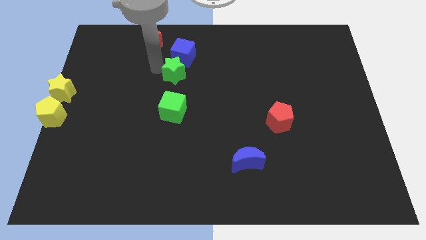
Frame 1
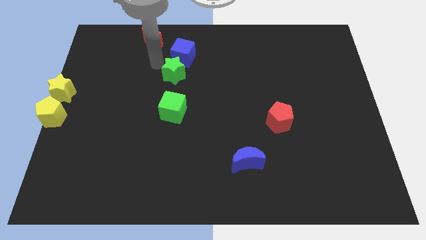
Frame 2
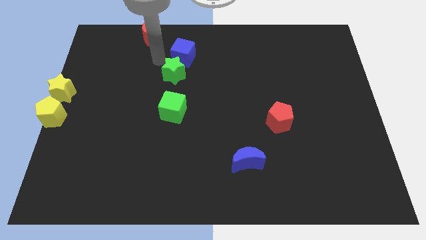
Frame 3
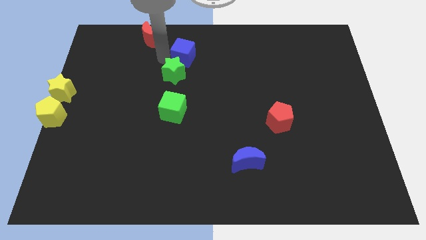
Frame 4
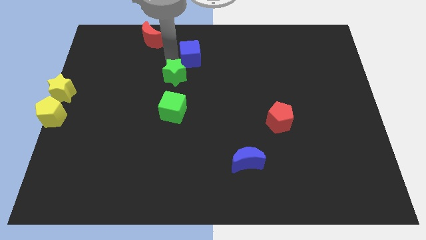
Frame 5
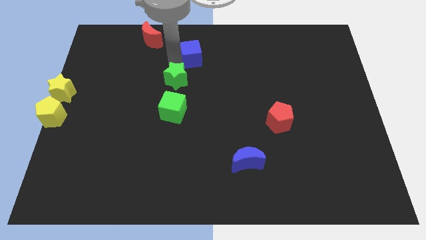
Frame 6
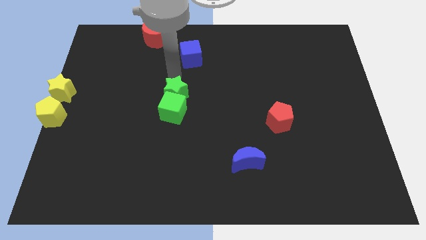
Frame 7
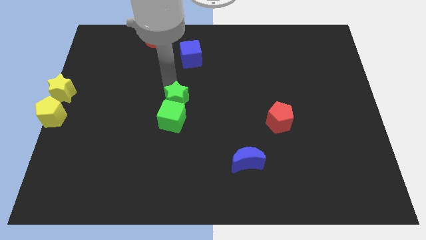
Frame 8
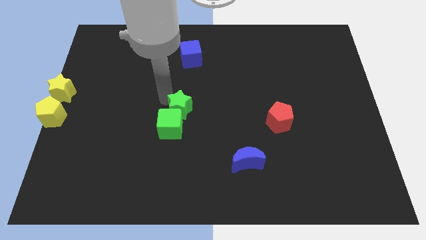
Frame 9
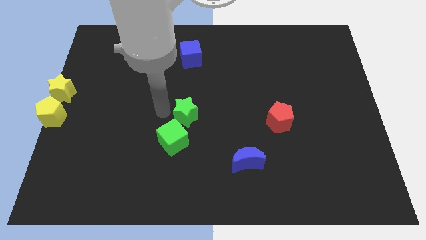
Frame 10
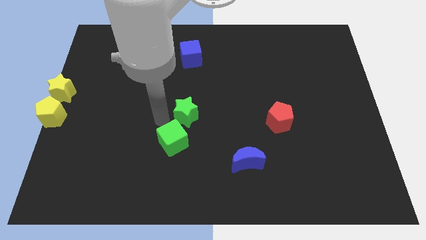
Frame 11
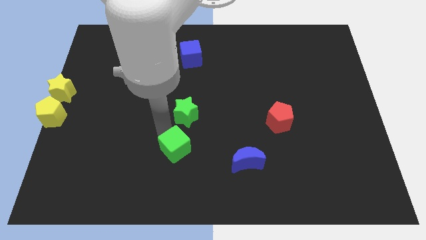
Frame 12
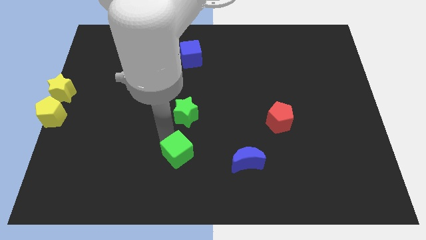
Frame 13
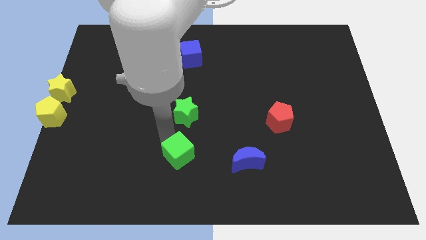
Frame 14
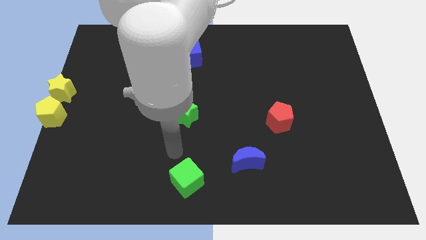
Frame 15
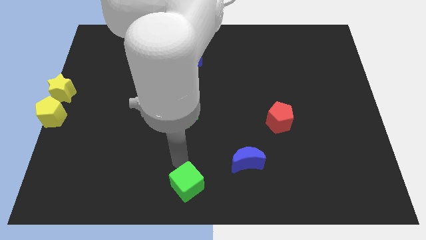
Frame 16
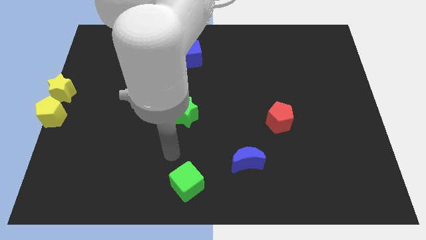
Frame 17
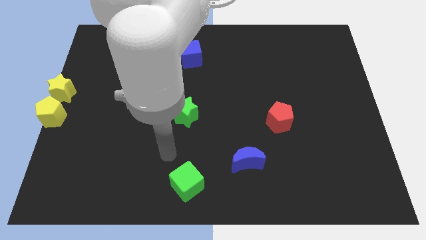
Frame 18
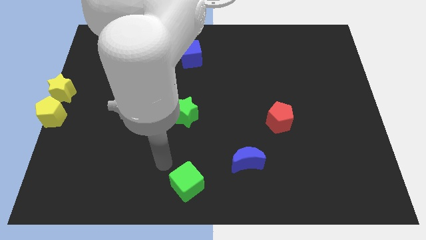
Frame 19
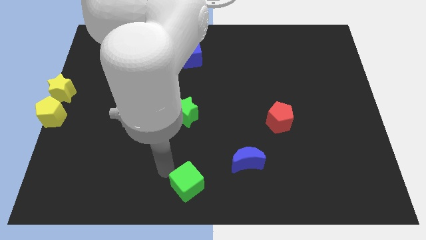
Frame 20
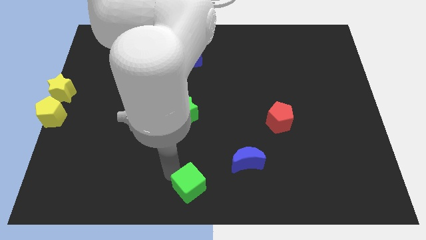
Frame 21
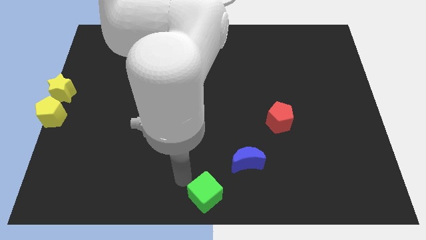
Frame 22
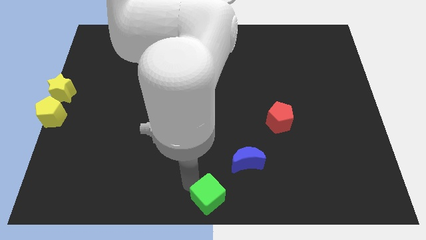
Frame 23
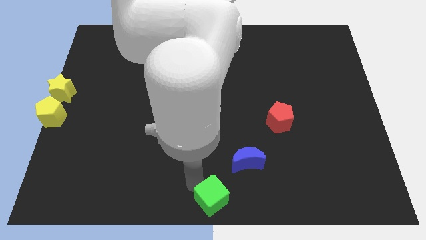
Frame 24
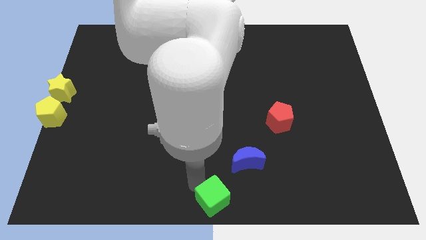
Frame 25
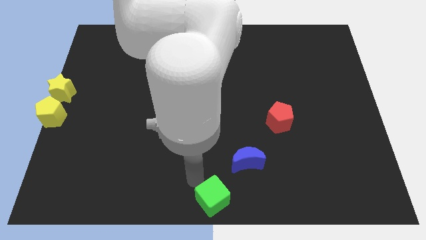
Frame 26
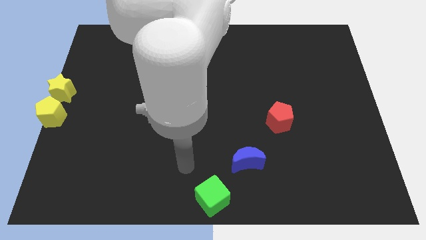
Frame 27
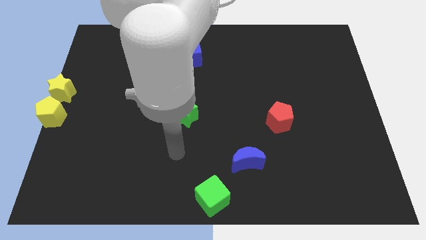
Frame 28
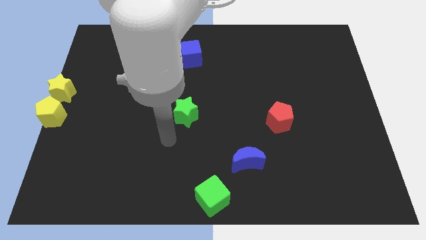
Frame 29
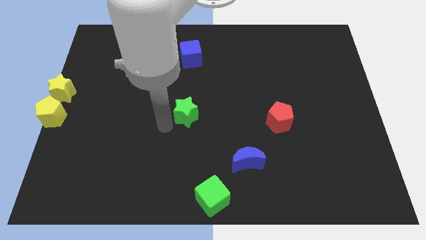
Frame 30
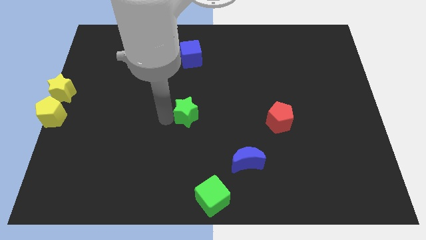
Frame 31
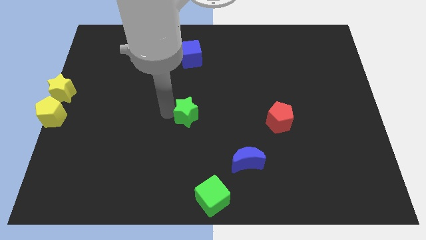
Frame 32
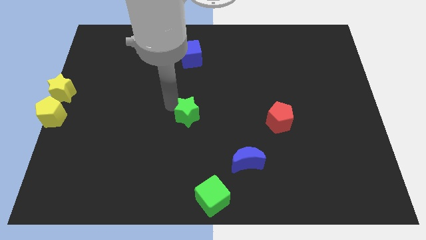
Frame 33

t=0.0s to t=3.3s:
place the green blocks diagonal to each other

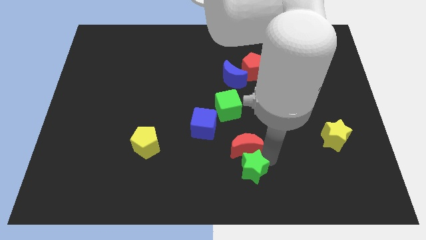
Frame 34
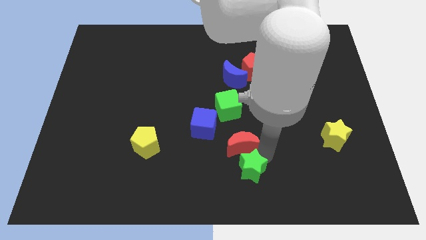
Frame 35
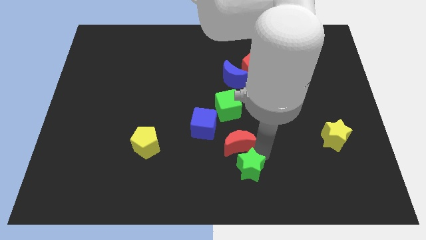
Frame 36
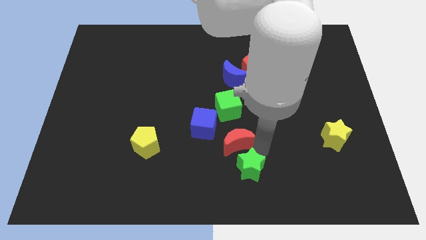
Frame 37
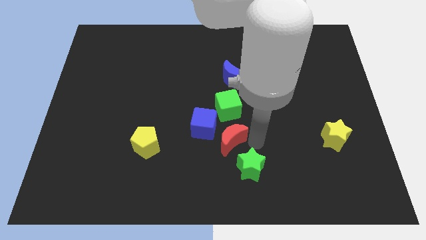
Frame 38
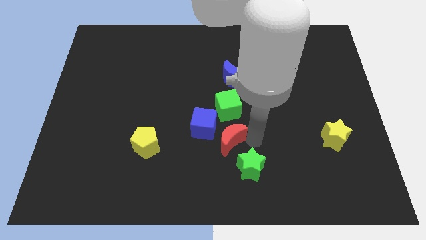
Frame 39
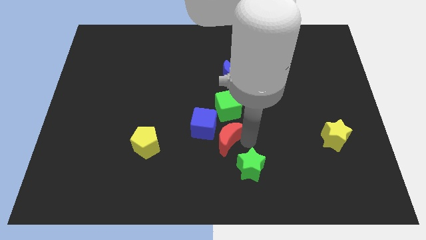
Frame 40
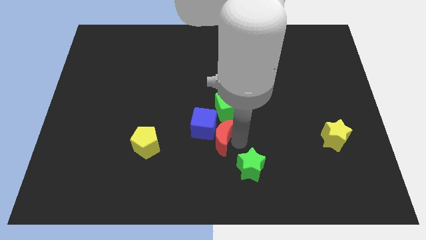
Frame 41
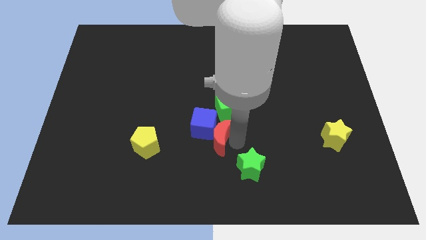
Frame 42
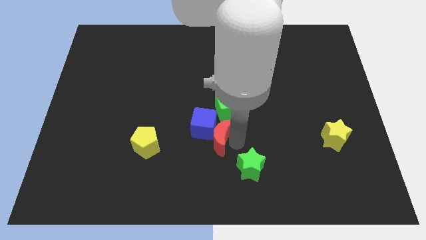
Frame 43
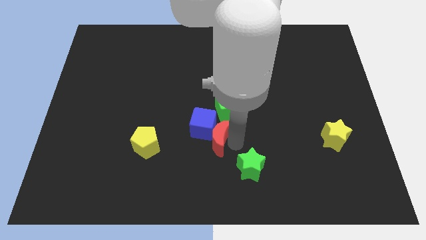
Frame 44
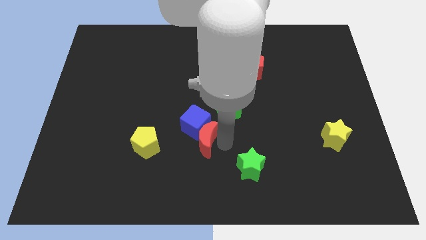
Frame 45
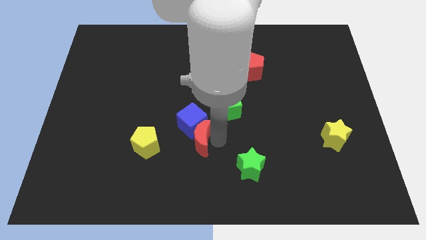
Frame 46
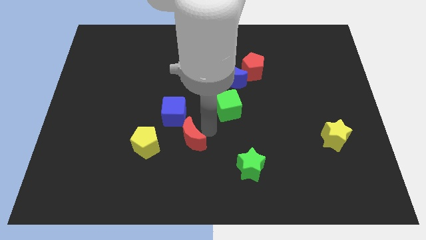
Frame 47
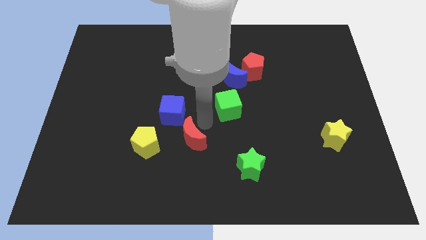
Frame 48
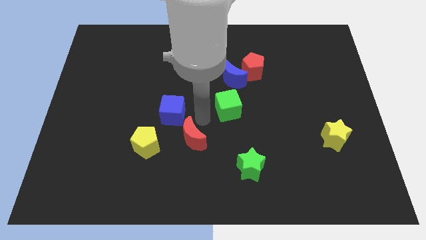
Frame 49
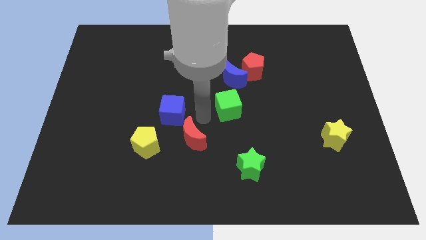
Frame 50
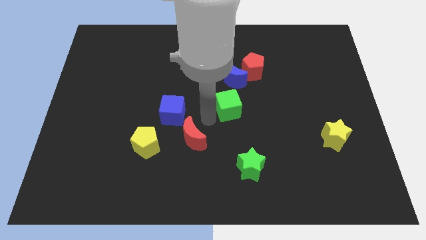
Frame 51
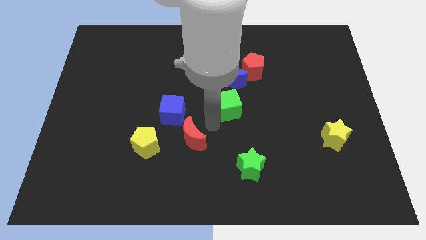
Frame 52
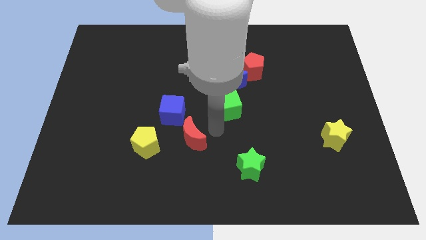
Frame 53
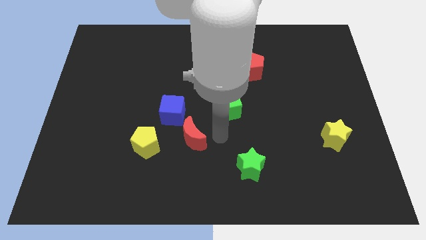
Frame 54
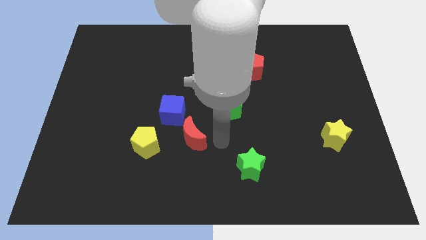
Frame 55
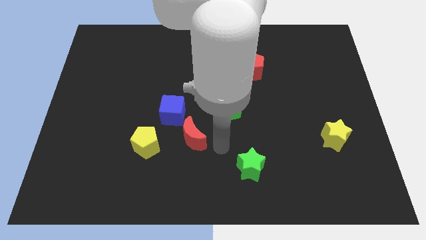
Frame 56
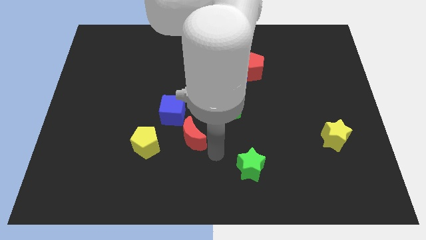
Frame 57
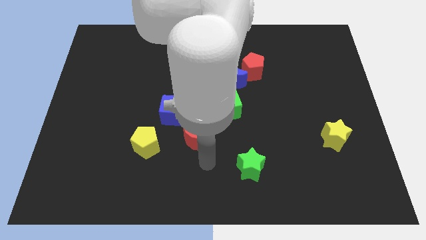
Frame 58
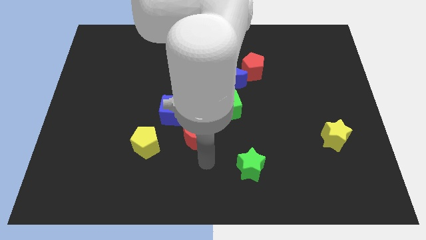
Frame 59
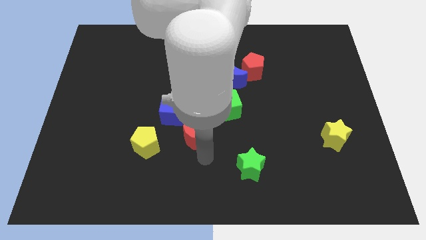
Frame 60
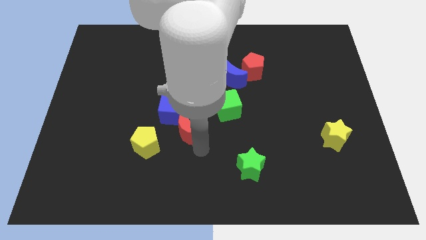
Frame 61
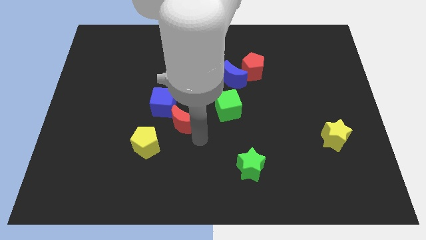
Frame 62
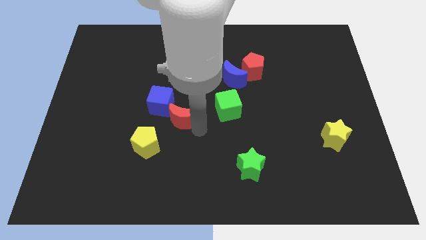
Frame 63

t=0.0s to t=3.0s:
separate red moon from the green star

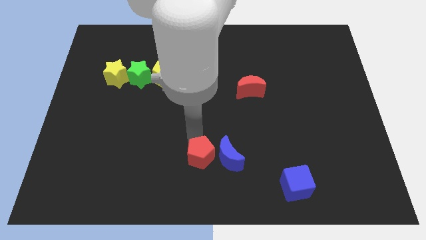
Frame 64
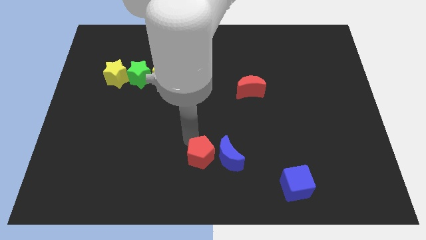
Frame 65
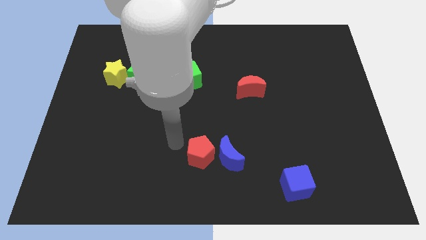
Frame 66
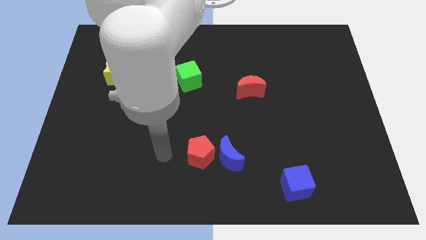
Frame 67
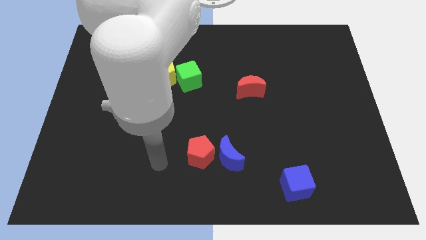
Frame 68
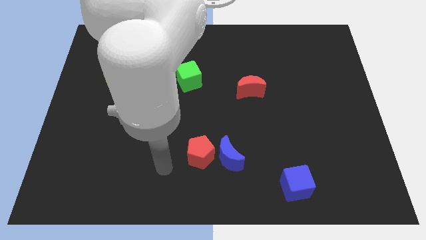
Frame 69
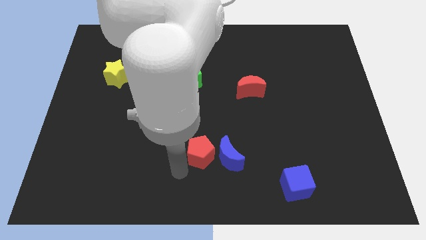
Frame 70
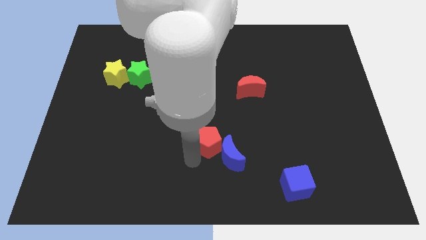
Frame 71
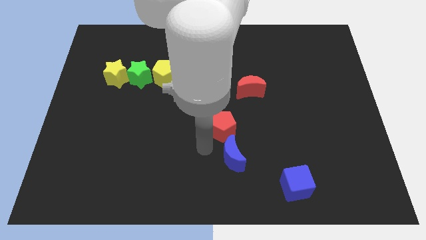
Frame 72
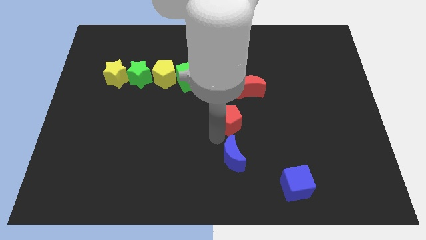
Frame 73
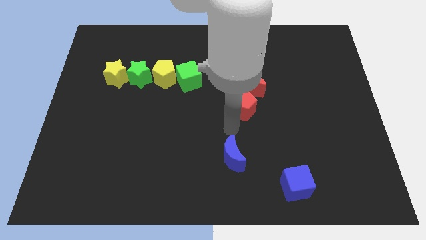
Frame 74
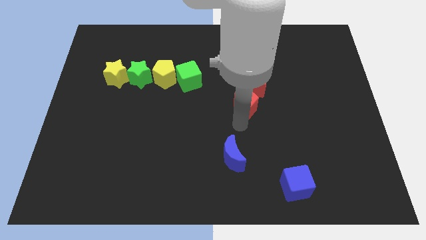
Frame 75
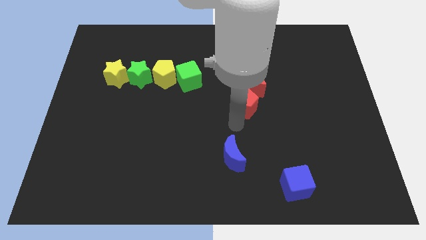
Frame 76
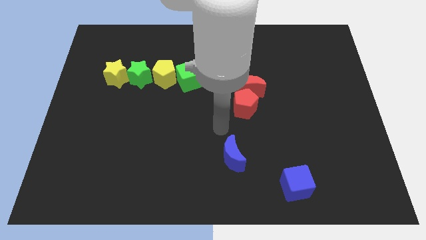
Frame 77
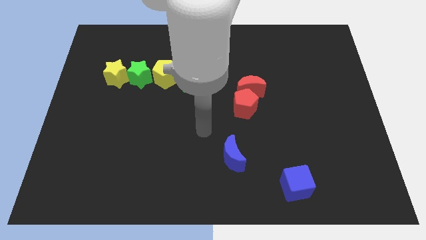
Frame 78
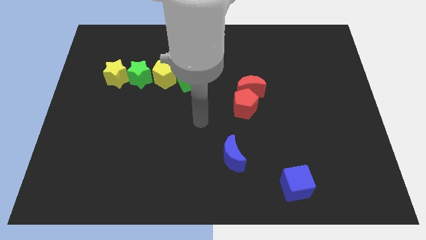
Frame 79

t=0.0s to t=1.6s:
place red pentagon below the red crescent

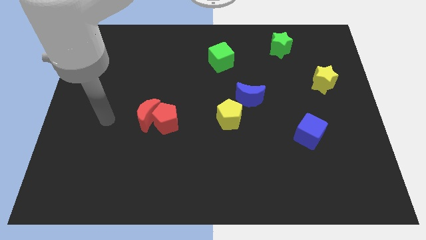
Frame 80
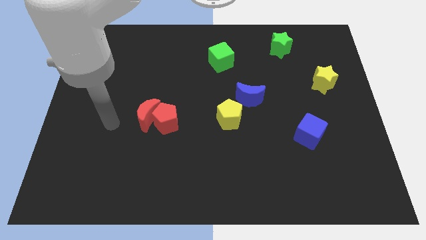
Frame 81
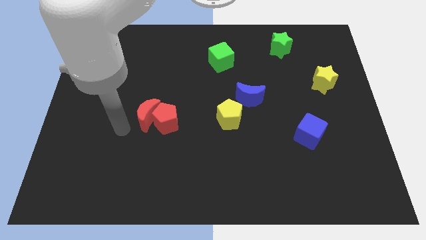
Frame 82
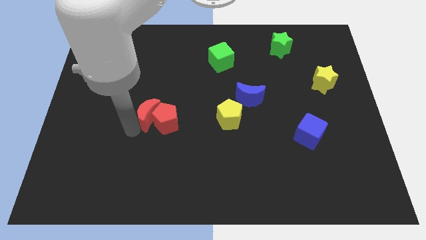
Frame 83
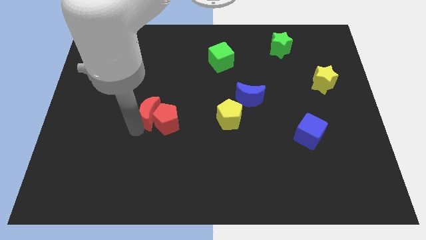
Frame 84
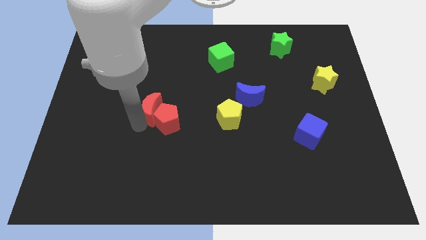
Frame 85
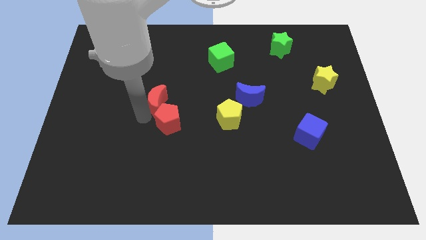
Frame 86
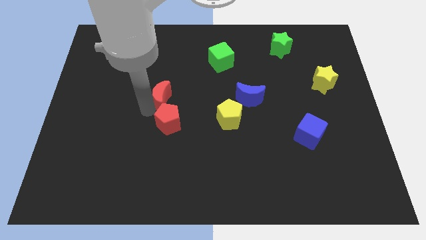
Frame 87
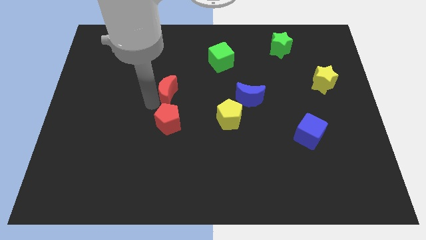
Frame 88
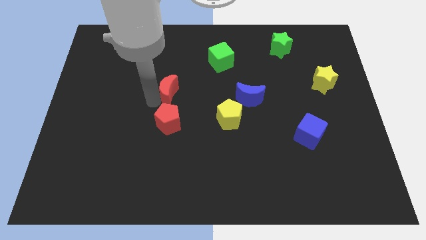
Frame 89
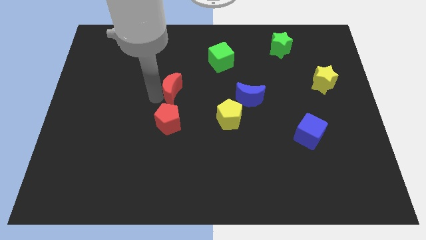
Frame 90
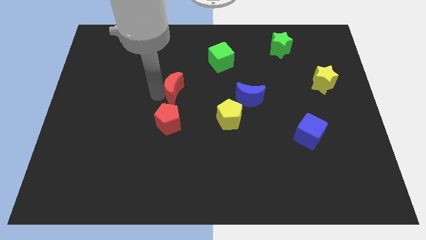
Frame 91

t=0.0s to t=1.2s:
separate red moon from the pentagon
